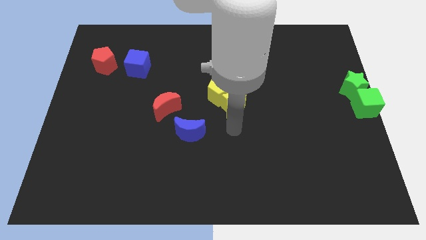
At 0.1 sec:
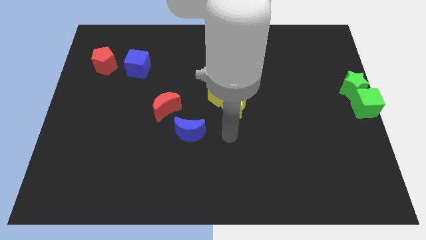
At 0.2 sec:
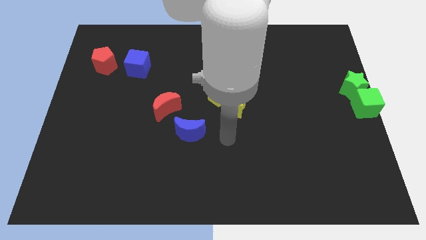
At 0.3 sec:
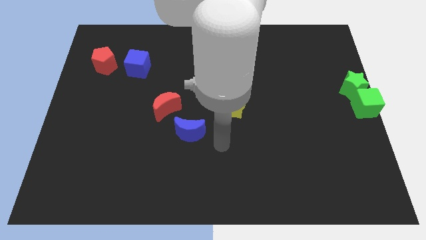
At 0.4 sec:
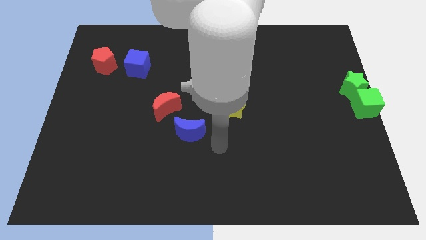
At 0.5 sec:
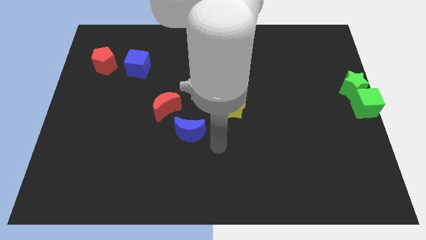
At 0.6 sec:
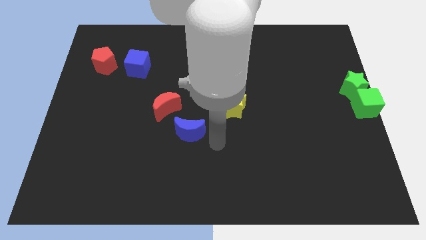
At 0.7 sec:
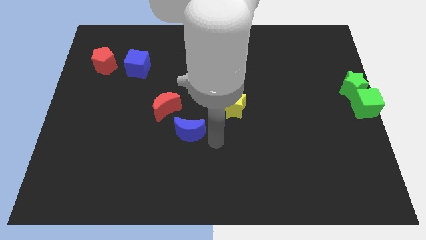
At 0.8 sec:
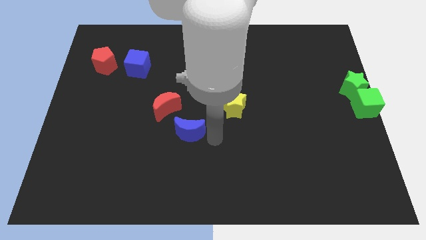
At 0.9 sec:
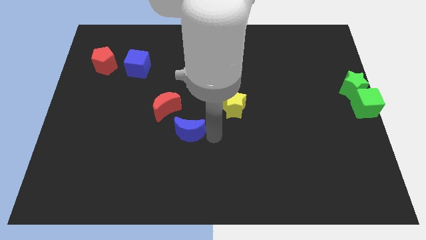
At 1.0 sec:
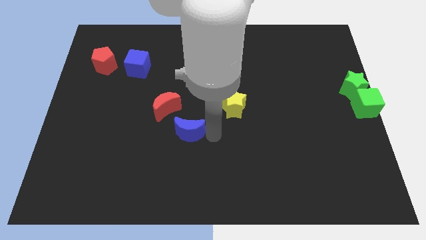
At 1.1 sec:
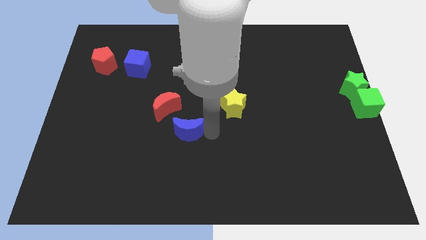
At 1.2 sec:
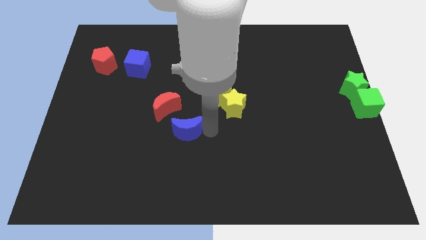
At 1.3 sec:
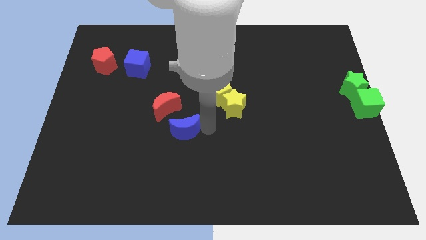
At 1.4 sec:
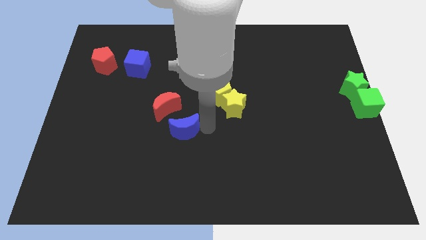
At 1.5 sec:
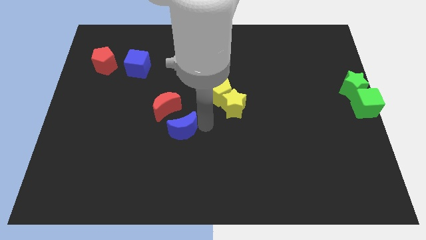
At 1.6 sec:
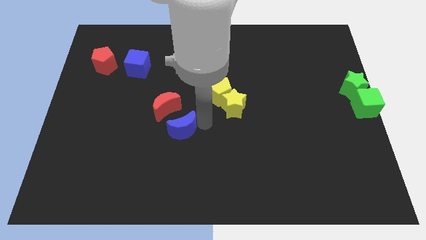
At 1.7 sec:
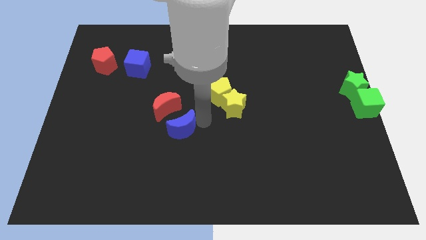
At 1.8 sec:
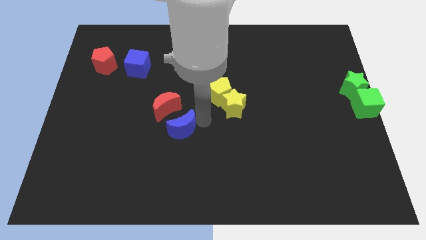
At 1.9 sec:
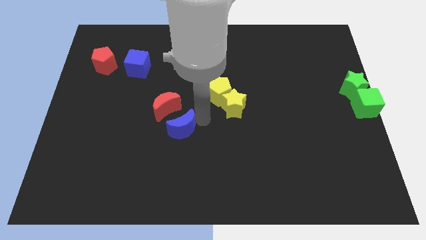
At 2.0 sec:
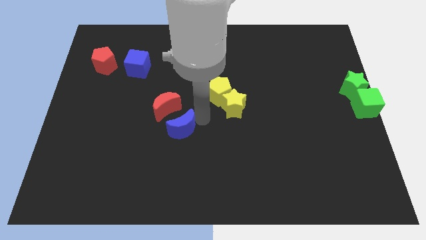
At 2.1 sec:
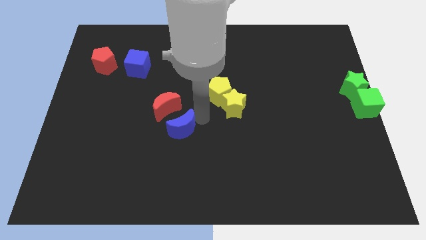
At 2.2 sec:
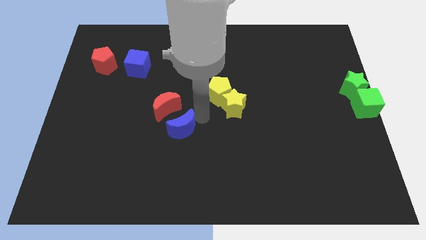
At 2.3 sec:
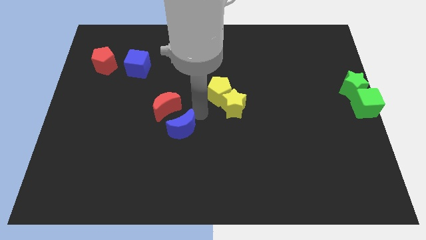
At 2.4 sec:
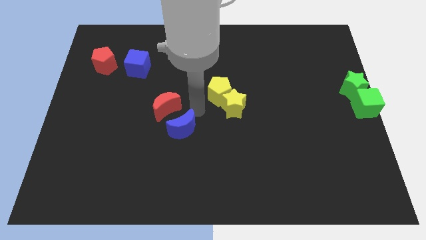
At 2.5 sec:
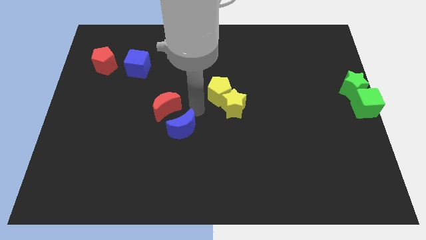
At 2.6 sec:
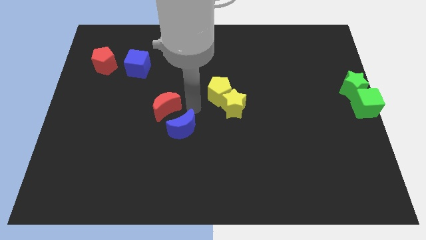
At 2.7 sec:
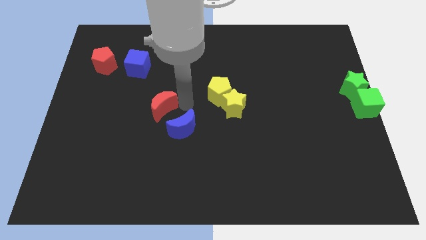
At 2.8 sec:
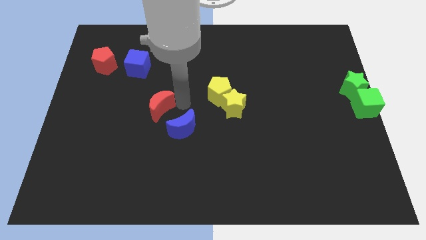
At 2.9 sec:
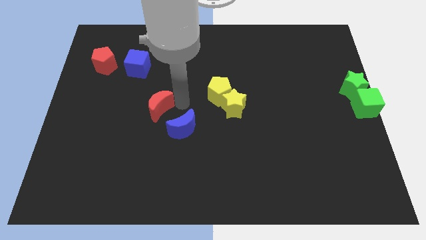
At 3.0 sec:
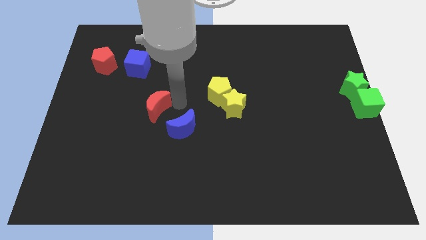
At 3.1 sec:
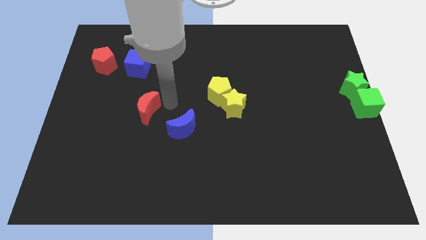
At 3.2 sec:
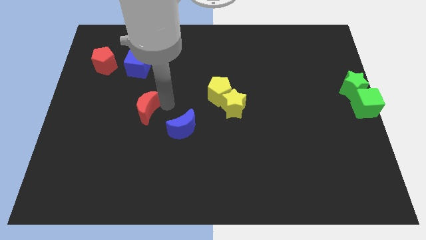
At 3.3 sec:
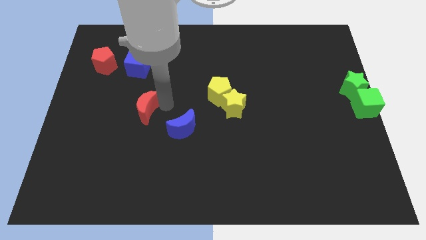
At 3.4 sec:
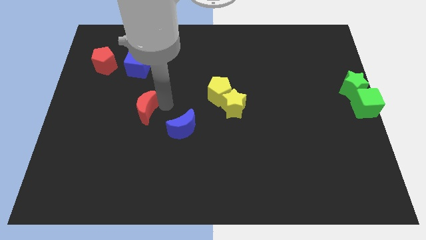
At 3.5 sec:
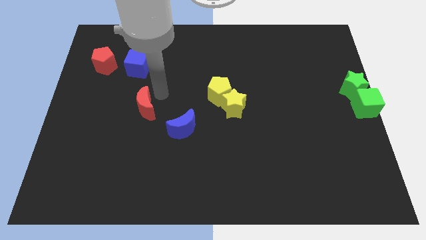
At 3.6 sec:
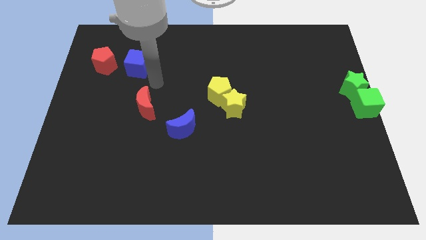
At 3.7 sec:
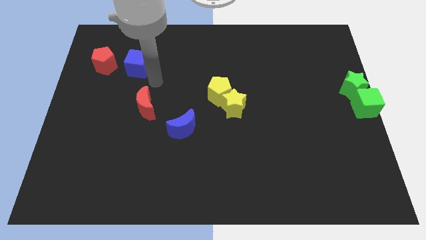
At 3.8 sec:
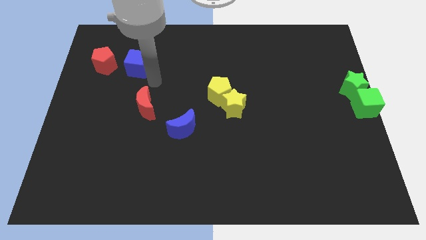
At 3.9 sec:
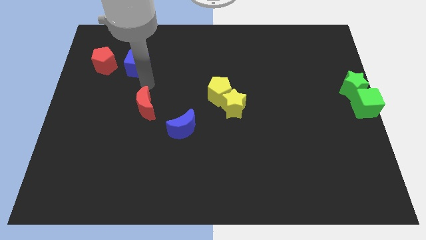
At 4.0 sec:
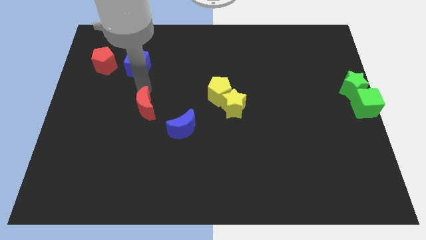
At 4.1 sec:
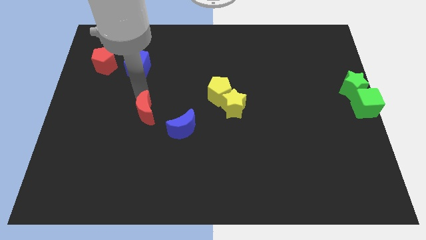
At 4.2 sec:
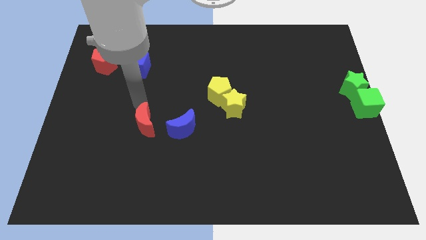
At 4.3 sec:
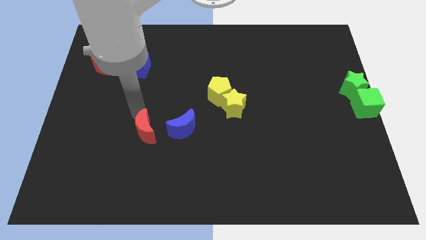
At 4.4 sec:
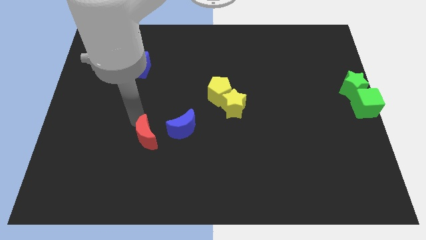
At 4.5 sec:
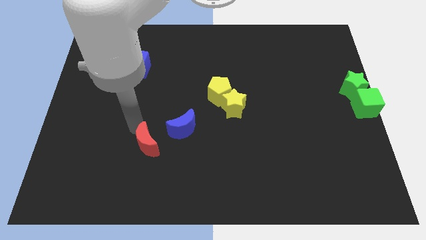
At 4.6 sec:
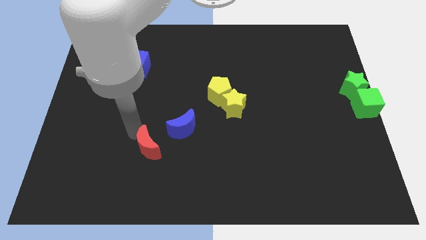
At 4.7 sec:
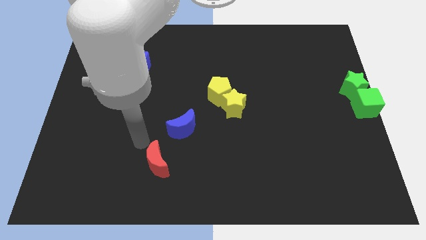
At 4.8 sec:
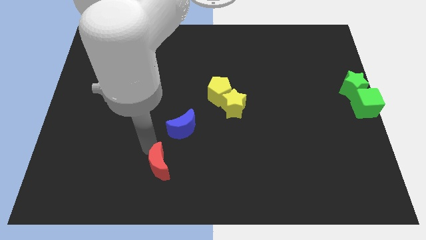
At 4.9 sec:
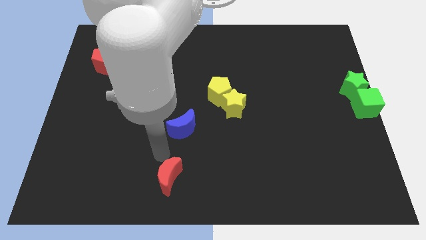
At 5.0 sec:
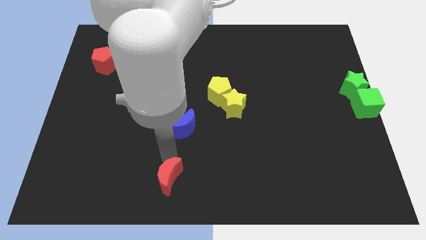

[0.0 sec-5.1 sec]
push the red crescent to the bottom side of the blue moon

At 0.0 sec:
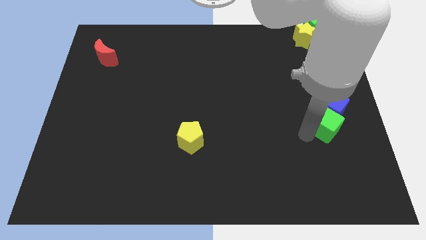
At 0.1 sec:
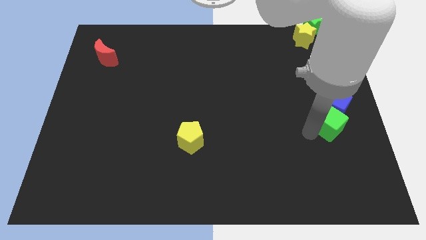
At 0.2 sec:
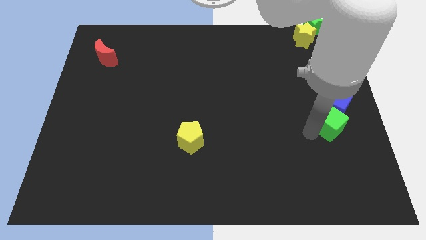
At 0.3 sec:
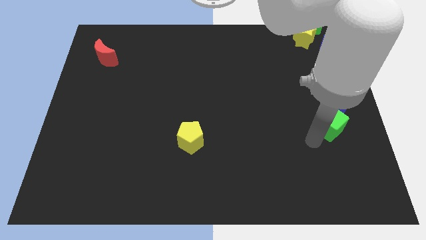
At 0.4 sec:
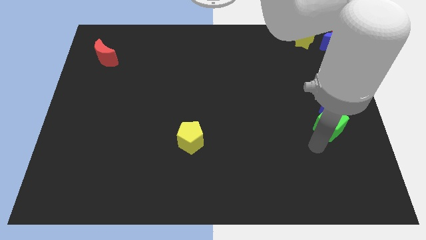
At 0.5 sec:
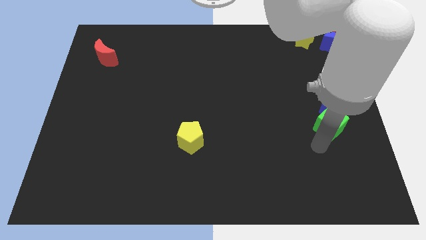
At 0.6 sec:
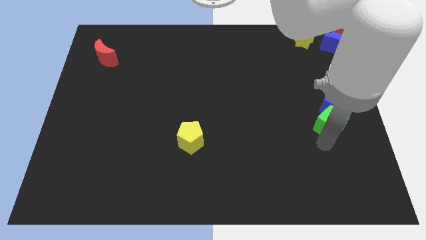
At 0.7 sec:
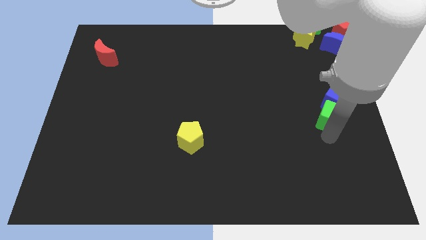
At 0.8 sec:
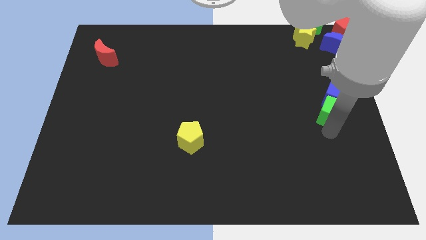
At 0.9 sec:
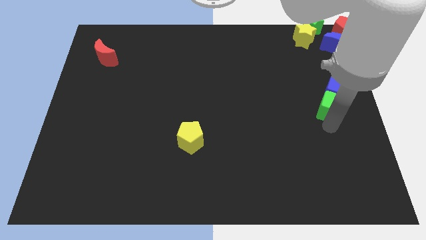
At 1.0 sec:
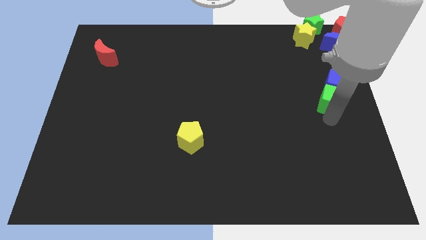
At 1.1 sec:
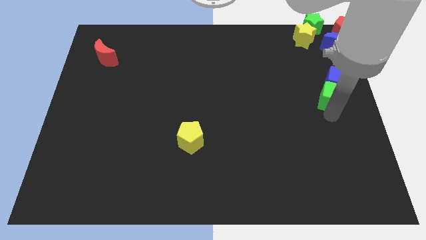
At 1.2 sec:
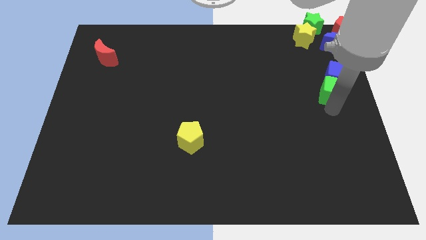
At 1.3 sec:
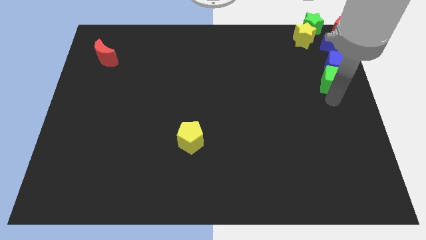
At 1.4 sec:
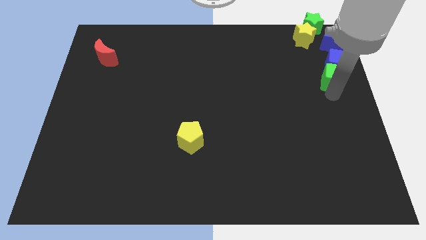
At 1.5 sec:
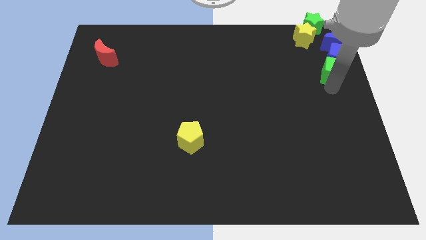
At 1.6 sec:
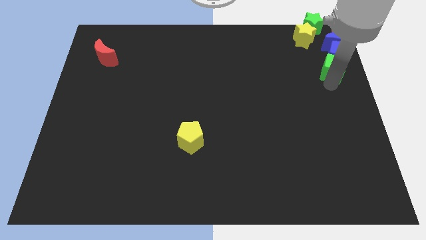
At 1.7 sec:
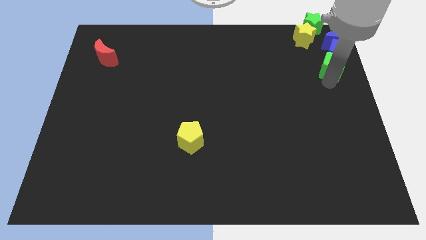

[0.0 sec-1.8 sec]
push both green cube and blue cube to top of the right corner

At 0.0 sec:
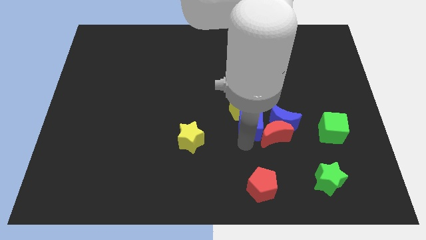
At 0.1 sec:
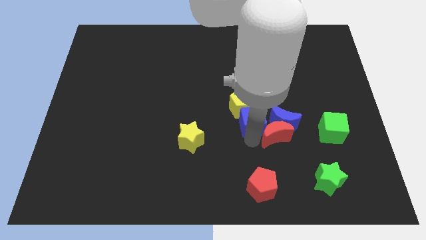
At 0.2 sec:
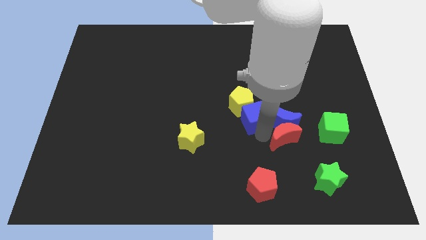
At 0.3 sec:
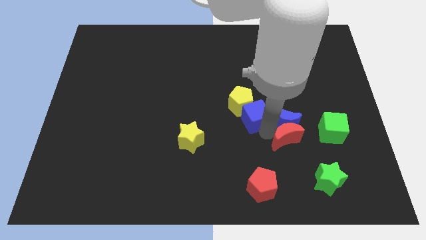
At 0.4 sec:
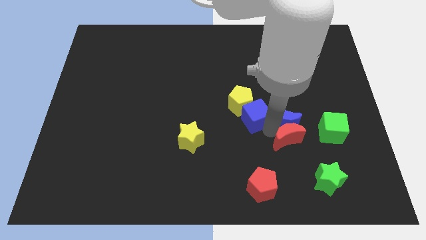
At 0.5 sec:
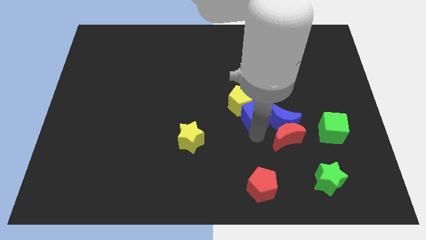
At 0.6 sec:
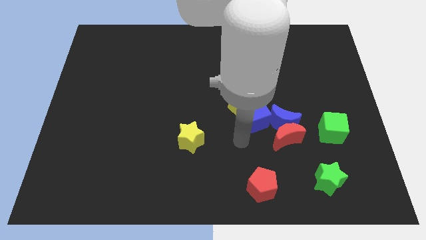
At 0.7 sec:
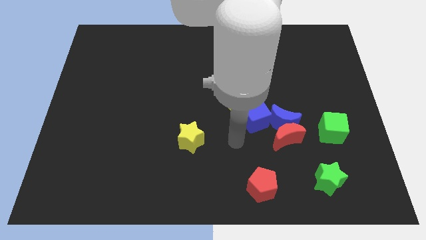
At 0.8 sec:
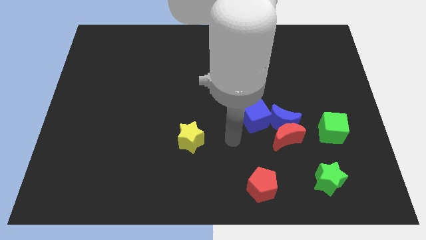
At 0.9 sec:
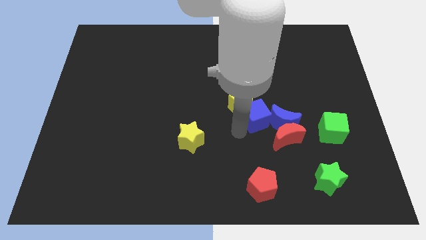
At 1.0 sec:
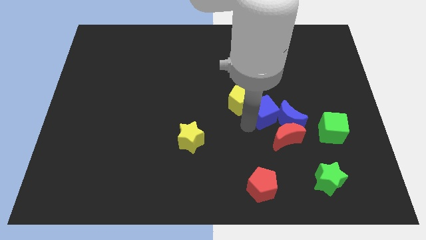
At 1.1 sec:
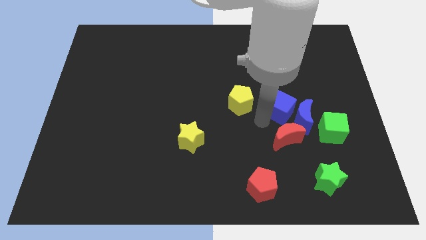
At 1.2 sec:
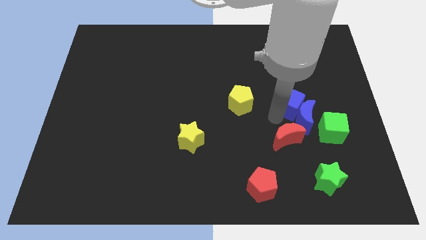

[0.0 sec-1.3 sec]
push the blue cube to the left of the blue crescent

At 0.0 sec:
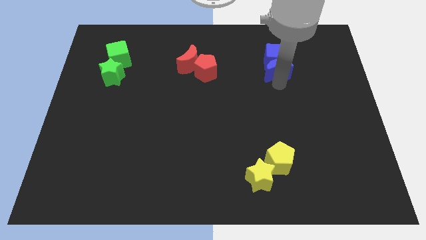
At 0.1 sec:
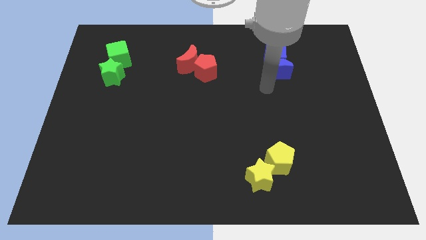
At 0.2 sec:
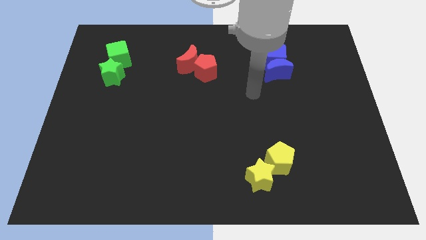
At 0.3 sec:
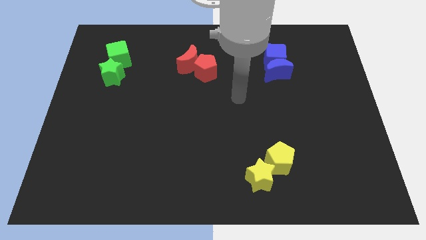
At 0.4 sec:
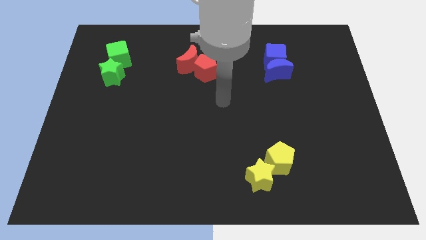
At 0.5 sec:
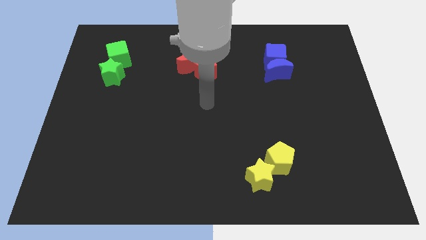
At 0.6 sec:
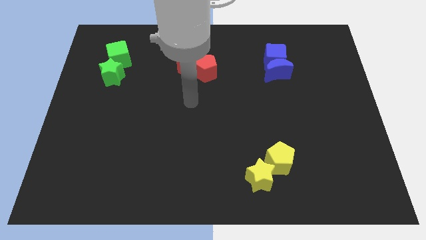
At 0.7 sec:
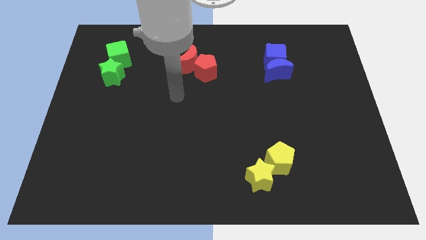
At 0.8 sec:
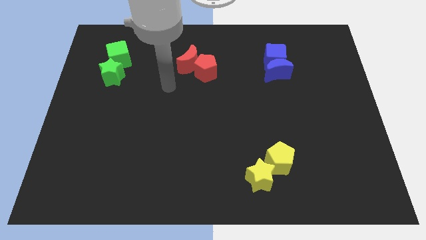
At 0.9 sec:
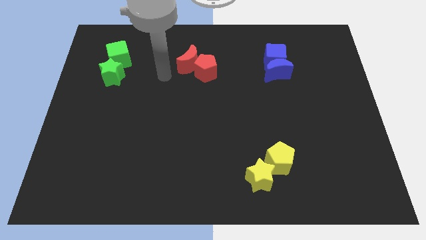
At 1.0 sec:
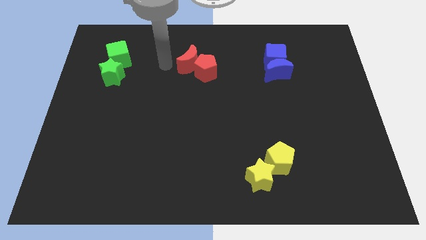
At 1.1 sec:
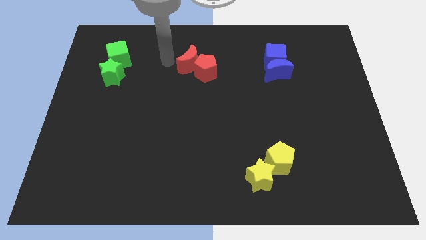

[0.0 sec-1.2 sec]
adjust the red pentagon into the red crescent along with the blue crescent into the blue cube
